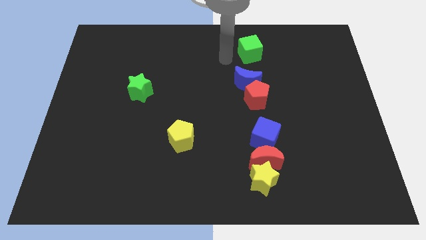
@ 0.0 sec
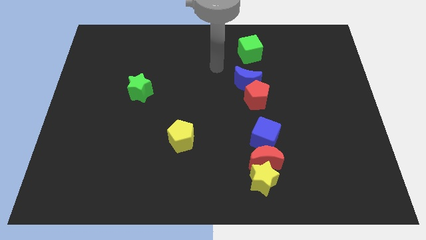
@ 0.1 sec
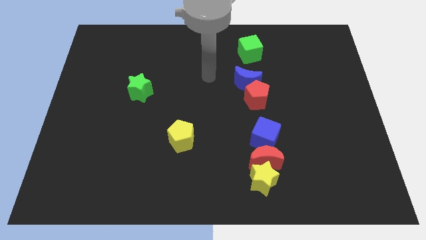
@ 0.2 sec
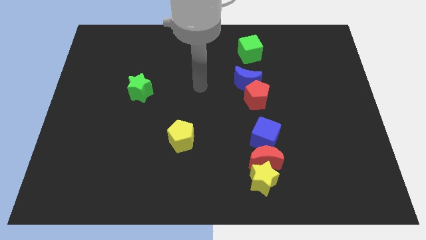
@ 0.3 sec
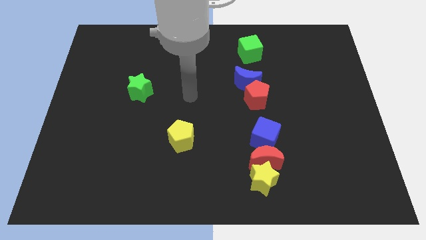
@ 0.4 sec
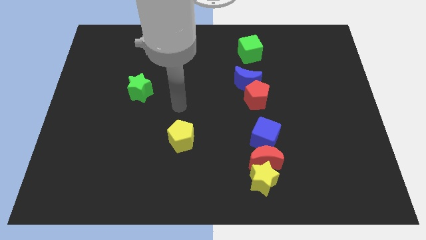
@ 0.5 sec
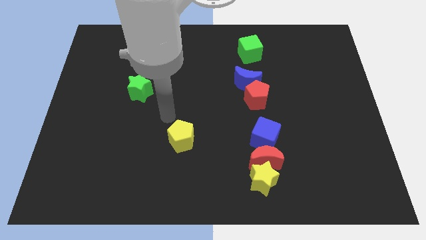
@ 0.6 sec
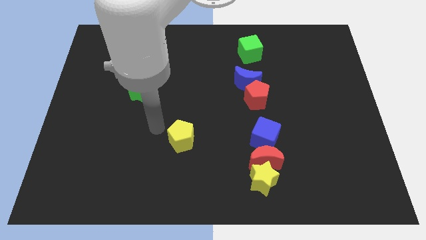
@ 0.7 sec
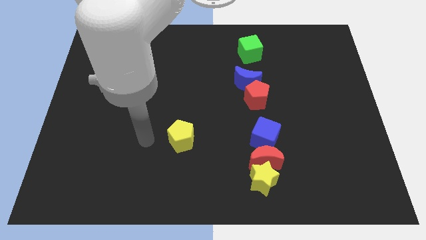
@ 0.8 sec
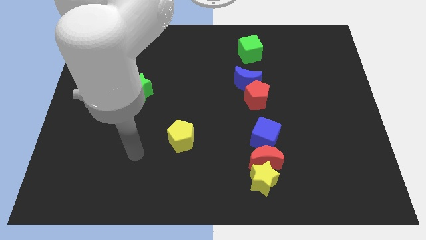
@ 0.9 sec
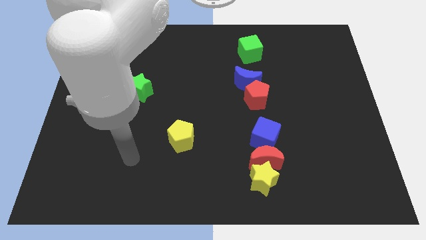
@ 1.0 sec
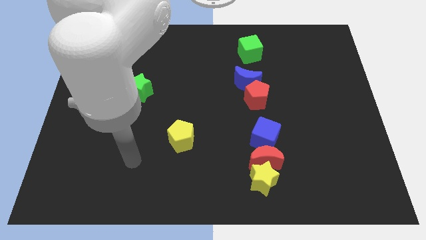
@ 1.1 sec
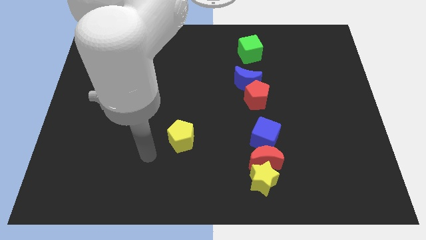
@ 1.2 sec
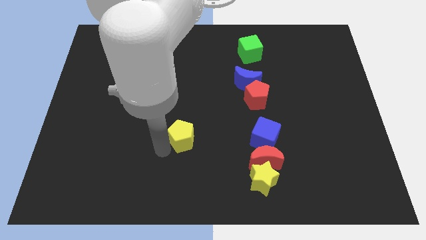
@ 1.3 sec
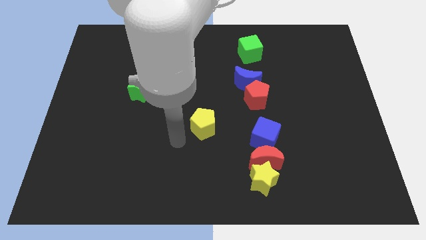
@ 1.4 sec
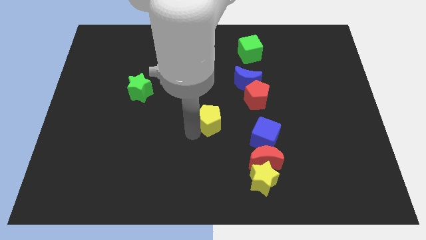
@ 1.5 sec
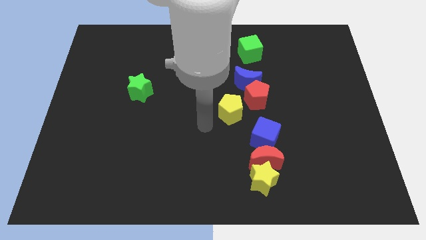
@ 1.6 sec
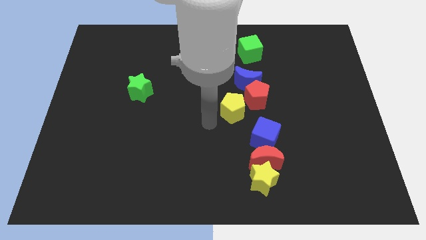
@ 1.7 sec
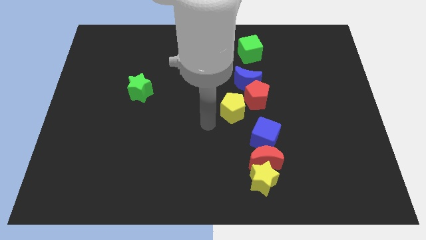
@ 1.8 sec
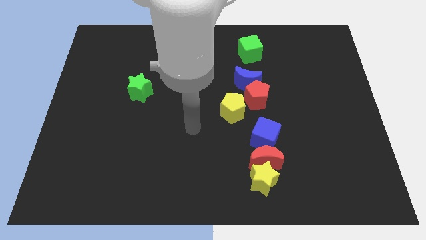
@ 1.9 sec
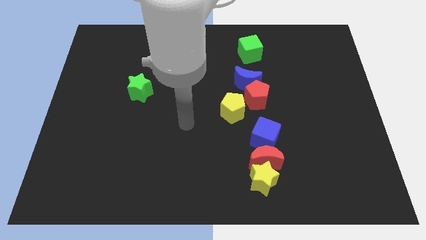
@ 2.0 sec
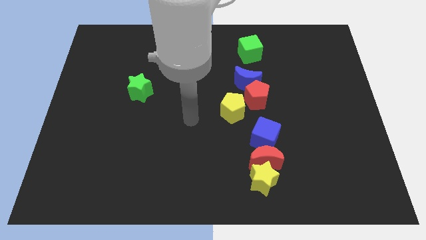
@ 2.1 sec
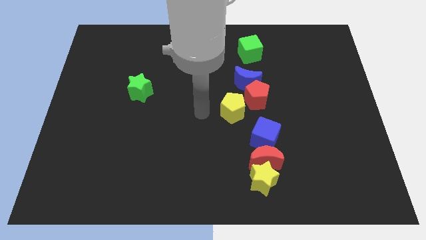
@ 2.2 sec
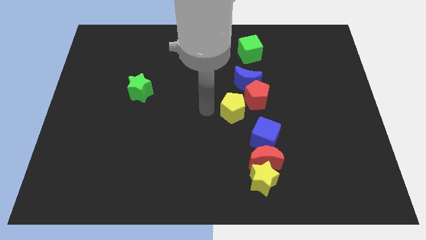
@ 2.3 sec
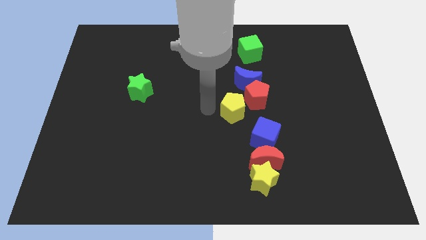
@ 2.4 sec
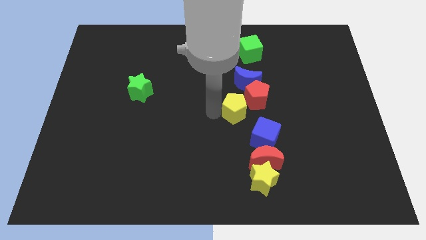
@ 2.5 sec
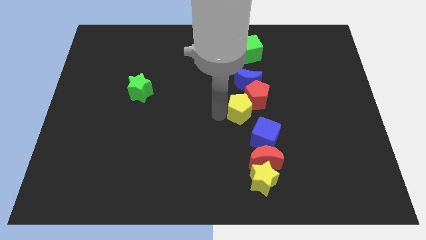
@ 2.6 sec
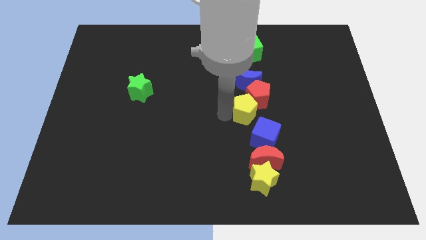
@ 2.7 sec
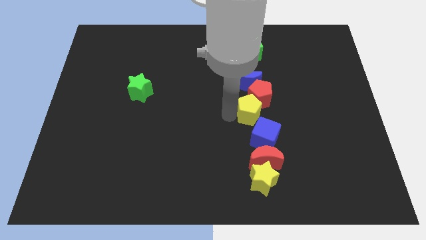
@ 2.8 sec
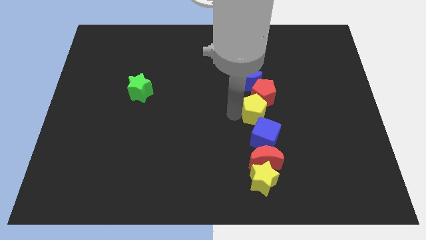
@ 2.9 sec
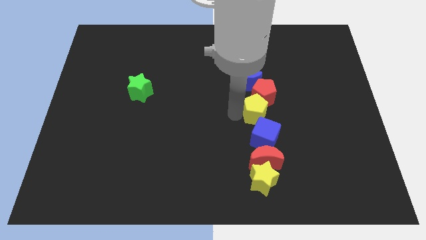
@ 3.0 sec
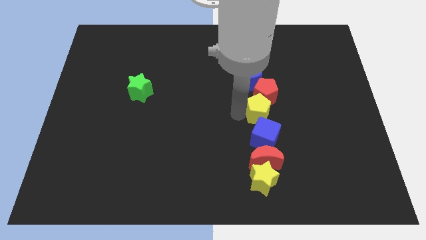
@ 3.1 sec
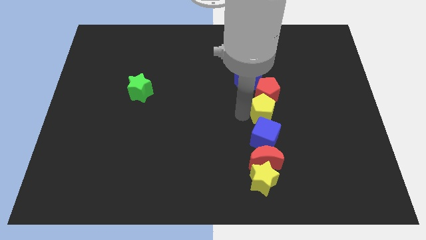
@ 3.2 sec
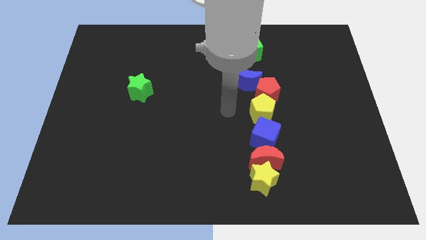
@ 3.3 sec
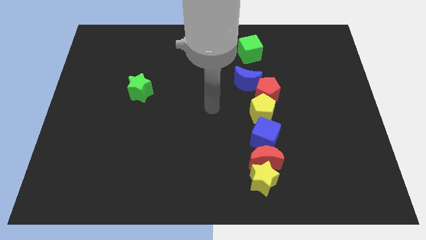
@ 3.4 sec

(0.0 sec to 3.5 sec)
place the yellow pentagon in between the red pentagon and blue cube

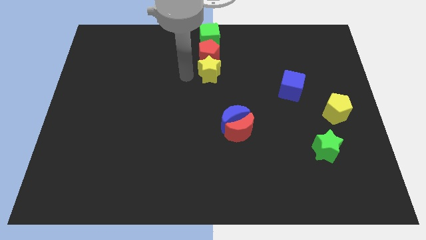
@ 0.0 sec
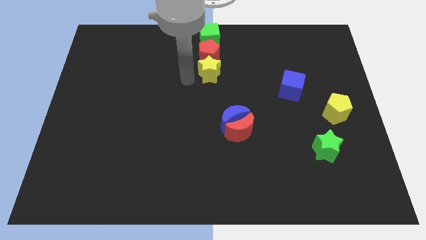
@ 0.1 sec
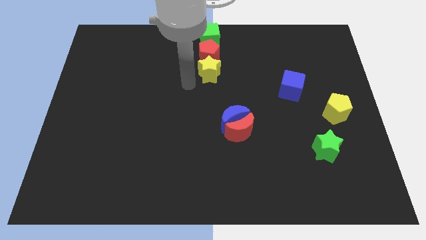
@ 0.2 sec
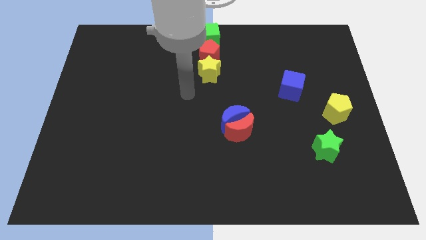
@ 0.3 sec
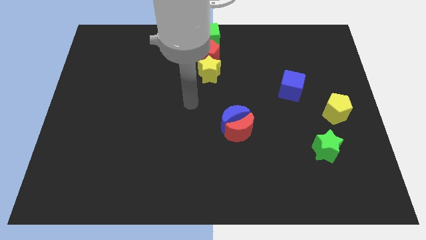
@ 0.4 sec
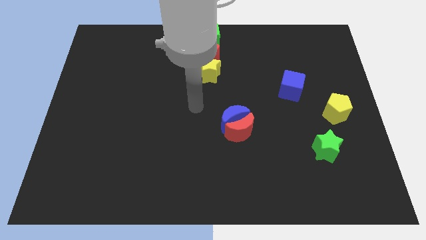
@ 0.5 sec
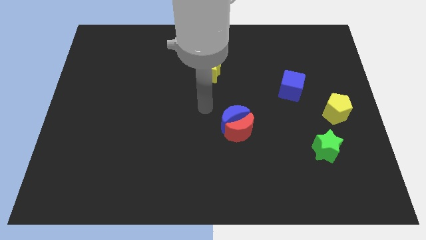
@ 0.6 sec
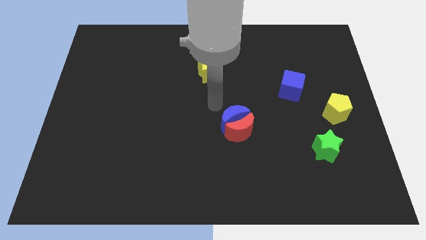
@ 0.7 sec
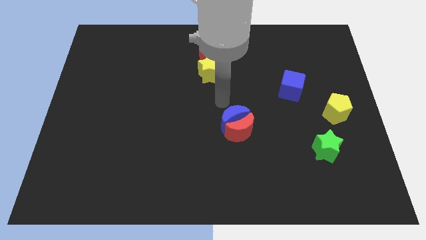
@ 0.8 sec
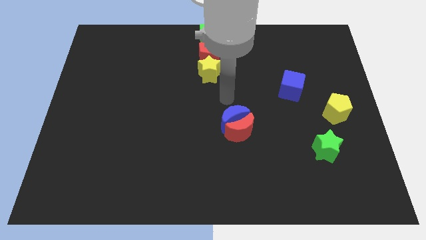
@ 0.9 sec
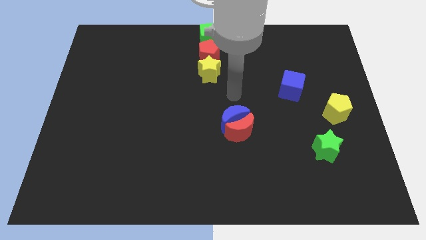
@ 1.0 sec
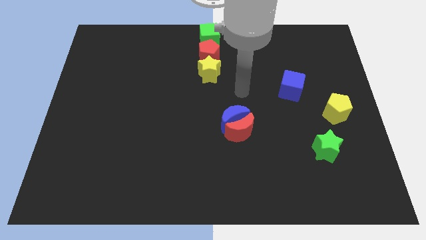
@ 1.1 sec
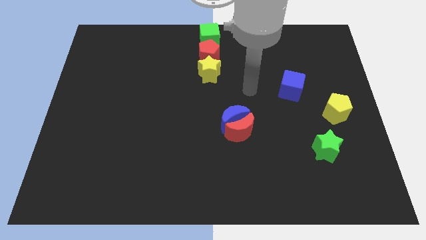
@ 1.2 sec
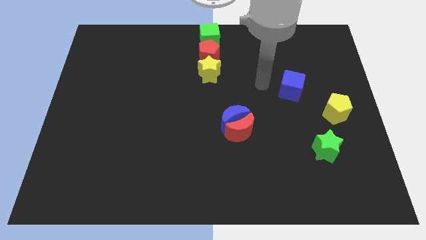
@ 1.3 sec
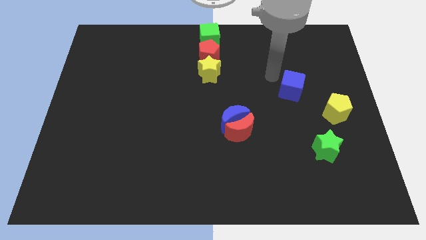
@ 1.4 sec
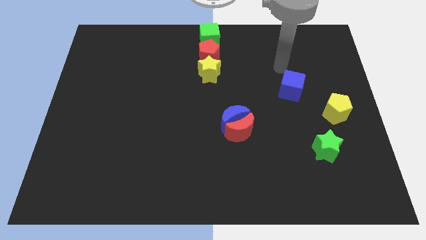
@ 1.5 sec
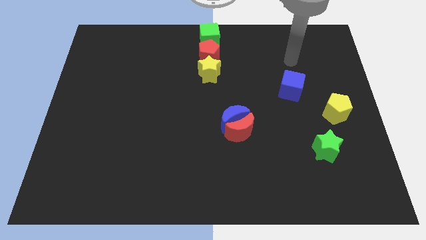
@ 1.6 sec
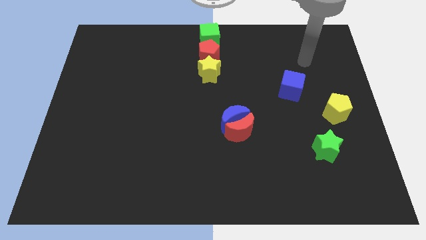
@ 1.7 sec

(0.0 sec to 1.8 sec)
move away from the yellow star

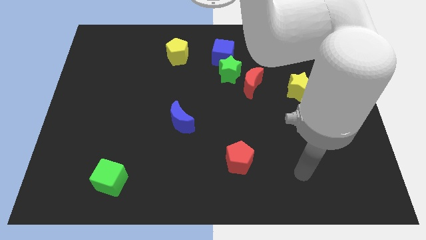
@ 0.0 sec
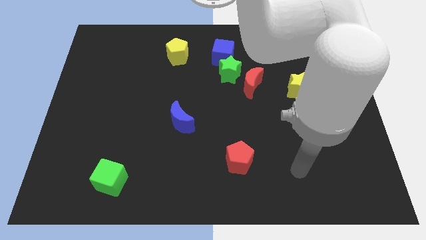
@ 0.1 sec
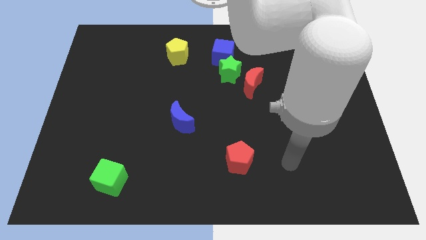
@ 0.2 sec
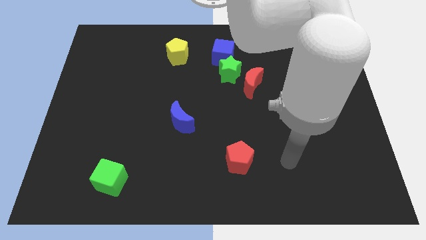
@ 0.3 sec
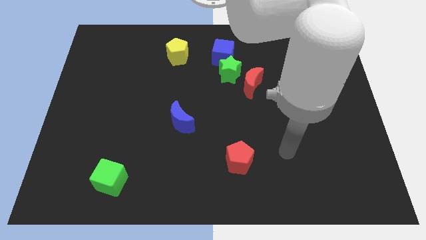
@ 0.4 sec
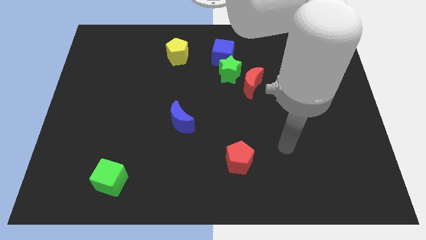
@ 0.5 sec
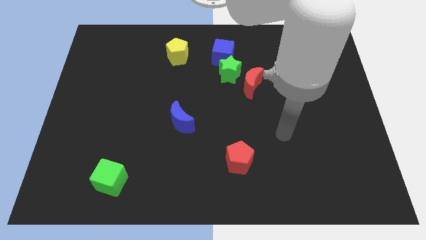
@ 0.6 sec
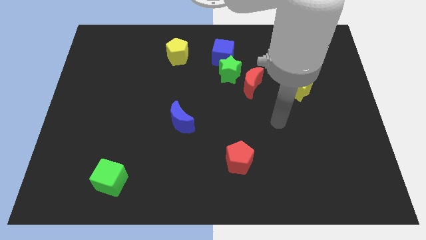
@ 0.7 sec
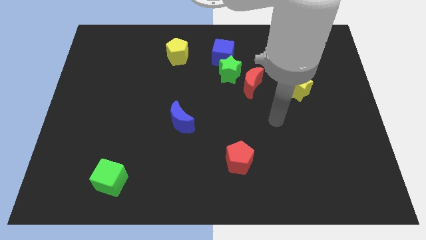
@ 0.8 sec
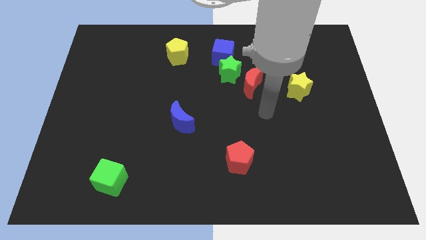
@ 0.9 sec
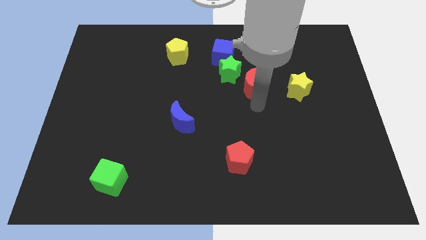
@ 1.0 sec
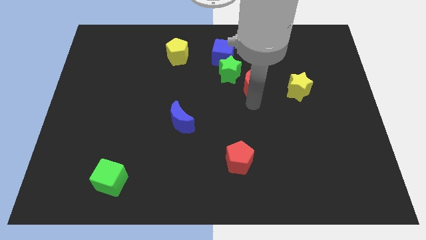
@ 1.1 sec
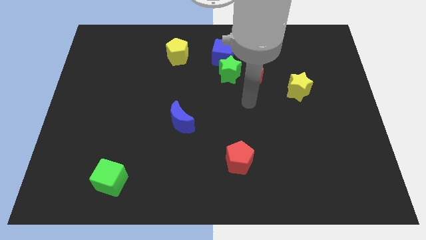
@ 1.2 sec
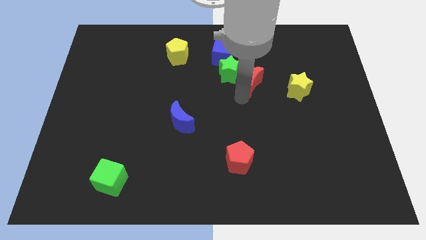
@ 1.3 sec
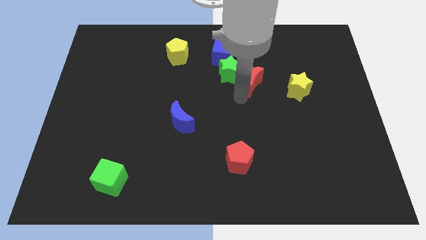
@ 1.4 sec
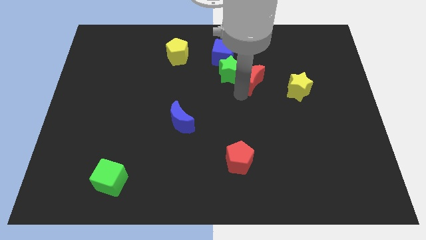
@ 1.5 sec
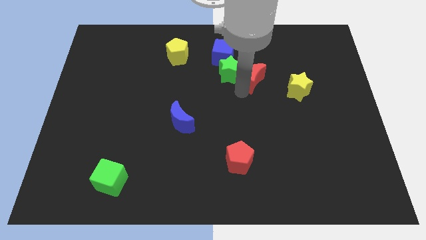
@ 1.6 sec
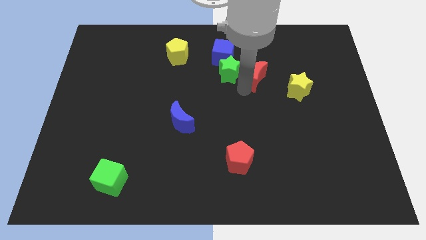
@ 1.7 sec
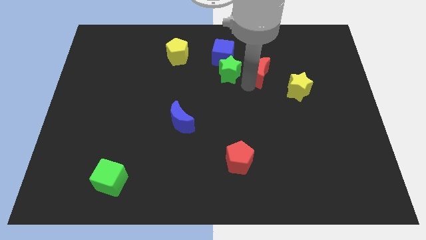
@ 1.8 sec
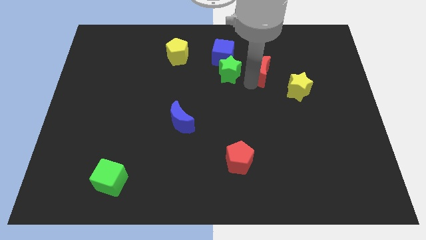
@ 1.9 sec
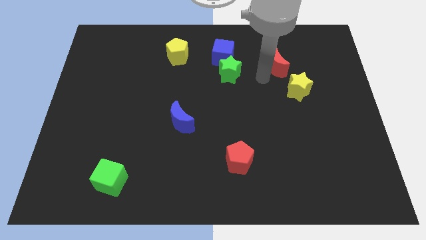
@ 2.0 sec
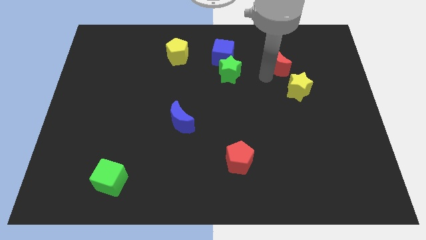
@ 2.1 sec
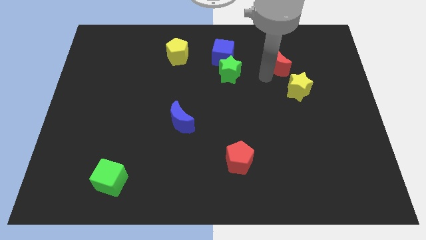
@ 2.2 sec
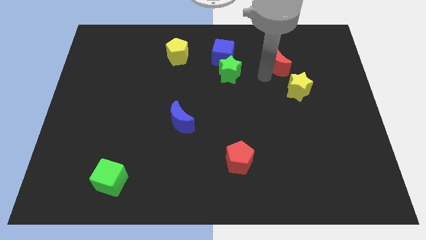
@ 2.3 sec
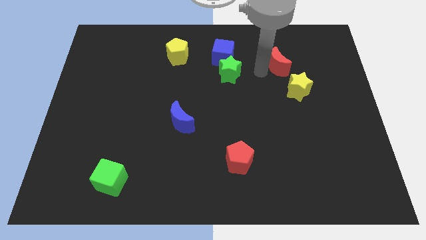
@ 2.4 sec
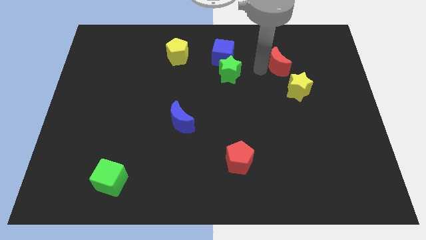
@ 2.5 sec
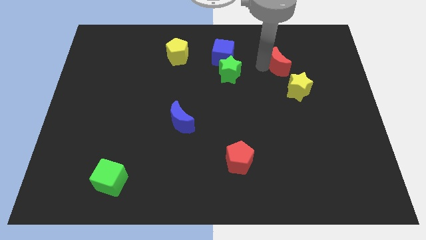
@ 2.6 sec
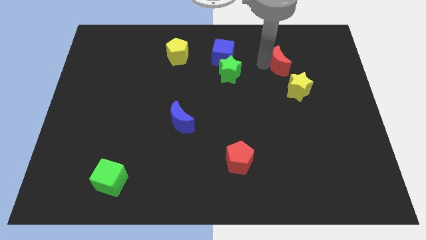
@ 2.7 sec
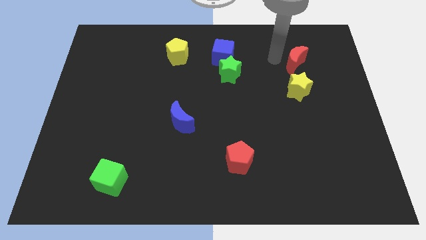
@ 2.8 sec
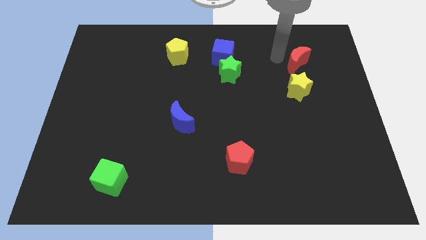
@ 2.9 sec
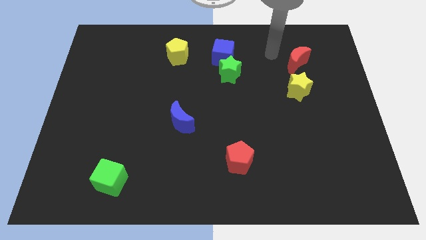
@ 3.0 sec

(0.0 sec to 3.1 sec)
place the red crescent above the yellow star

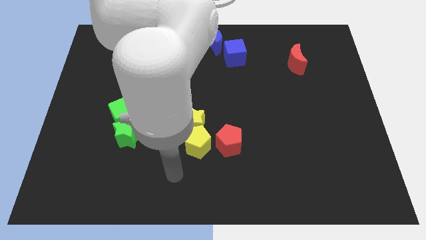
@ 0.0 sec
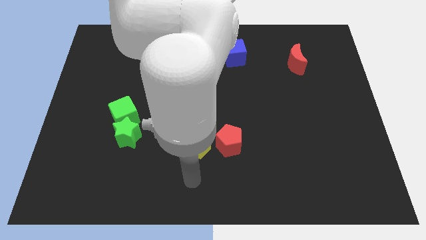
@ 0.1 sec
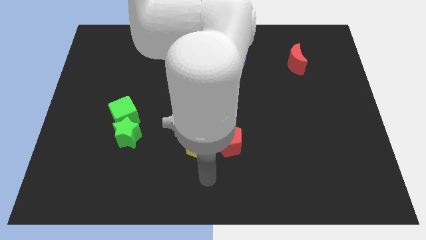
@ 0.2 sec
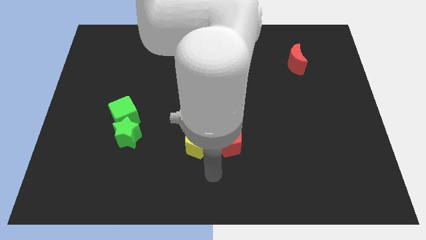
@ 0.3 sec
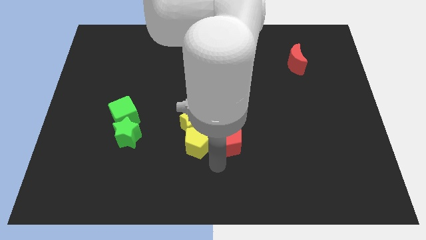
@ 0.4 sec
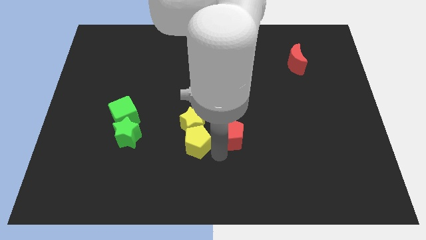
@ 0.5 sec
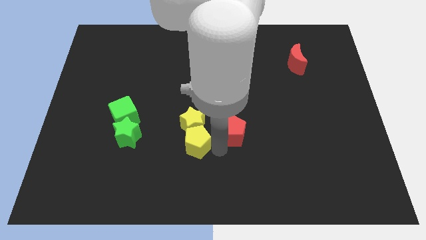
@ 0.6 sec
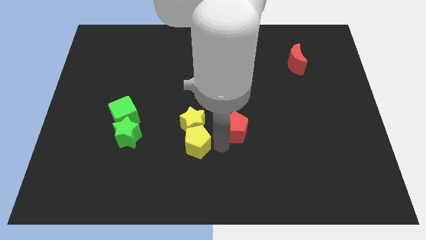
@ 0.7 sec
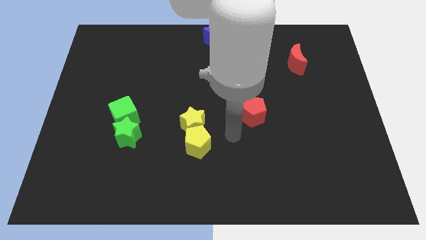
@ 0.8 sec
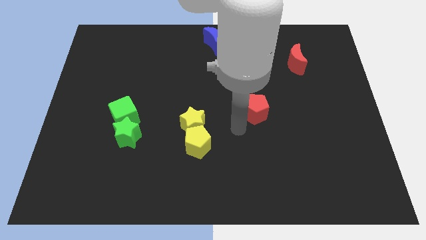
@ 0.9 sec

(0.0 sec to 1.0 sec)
slide the red pentagon towards top
